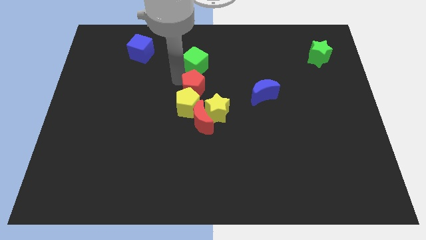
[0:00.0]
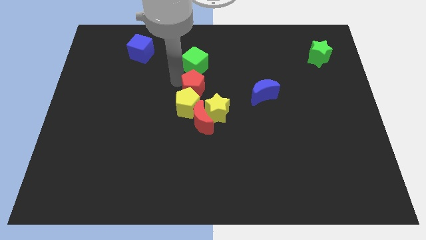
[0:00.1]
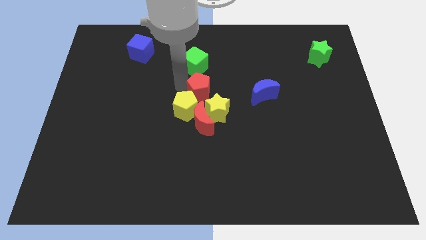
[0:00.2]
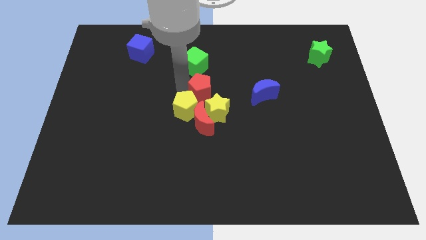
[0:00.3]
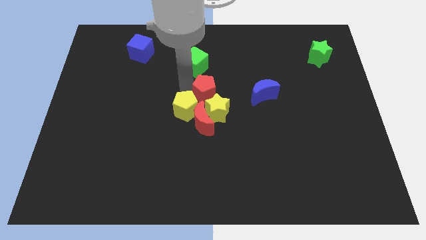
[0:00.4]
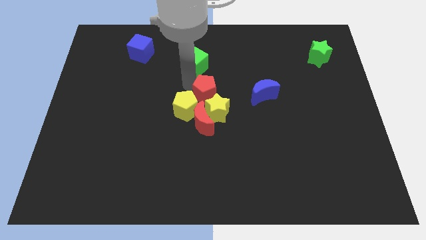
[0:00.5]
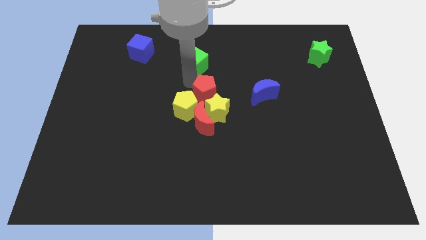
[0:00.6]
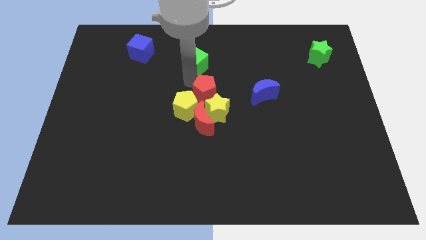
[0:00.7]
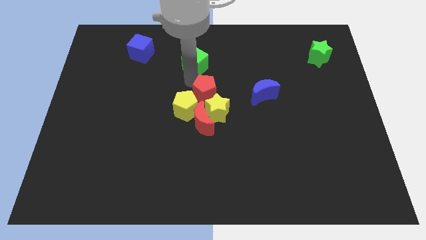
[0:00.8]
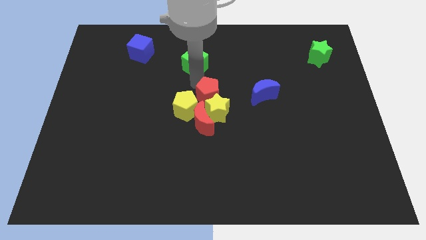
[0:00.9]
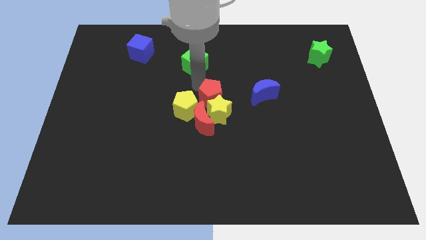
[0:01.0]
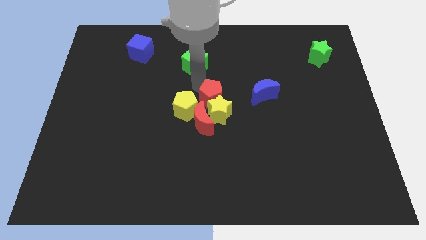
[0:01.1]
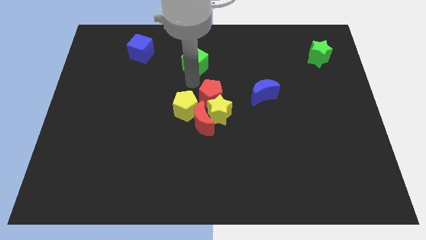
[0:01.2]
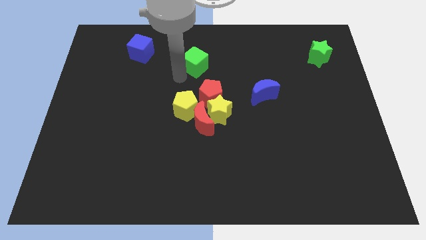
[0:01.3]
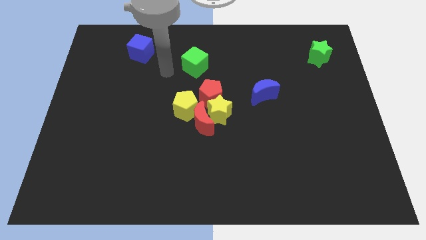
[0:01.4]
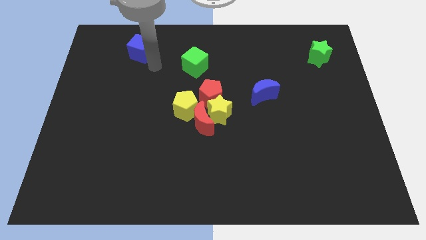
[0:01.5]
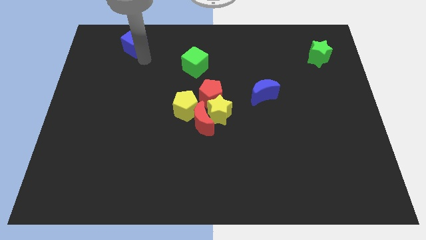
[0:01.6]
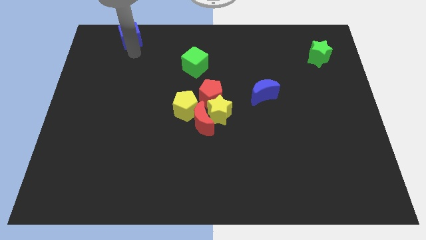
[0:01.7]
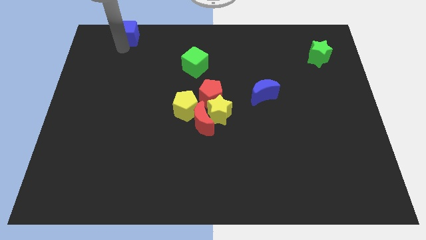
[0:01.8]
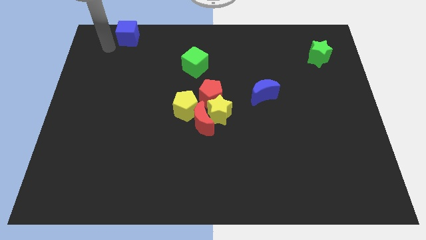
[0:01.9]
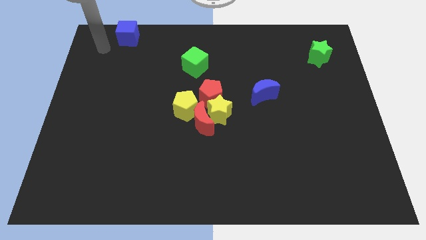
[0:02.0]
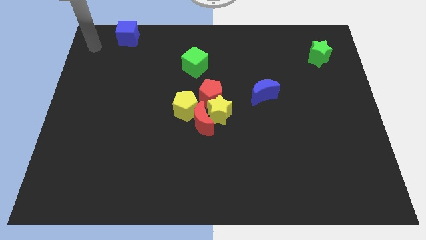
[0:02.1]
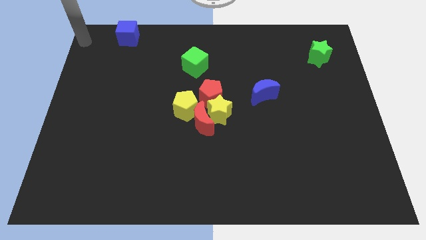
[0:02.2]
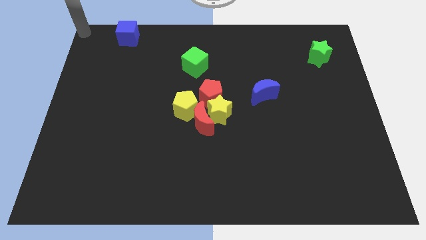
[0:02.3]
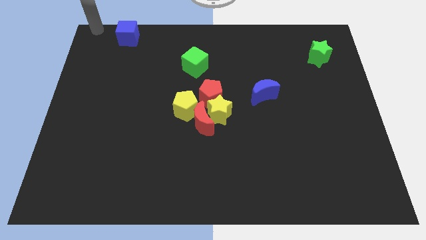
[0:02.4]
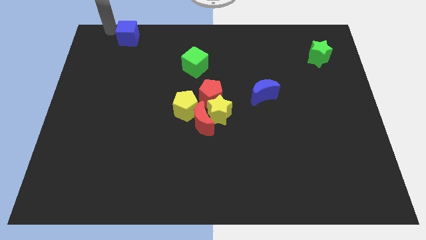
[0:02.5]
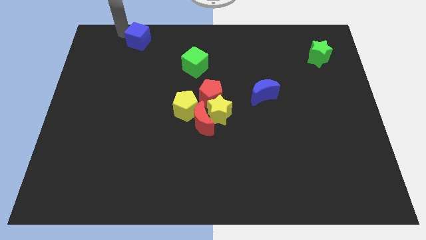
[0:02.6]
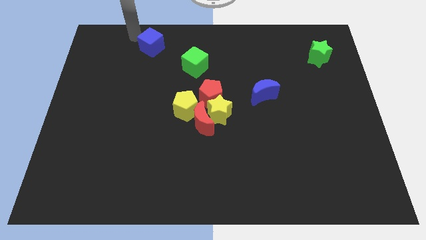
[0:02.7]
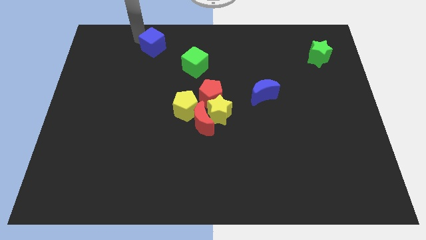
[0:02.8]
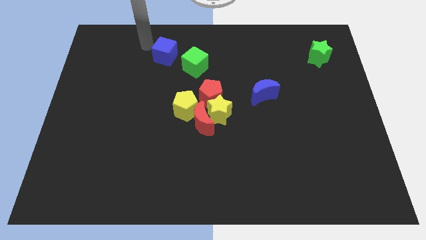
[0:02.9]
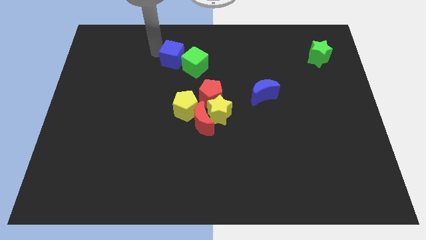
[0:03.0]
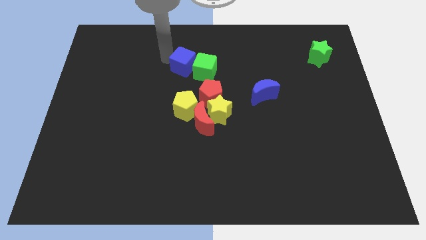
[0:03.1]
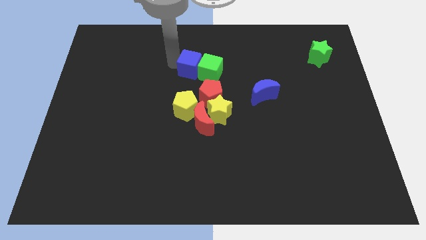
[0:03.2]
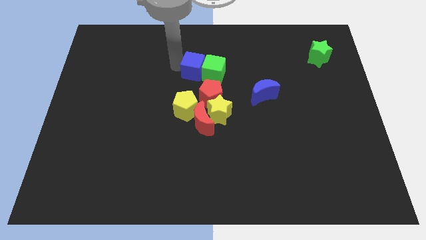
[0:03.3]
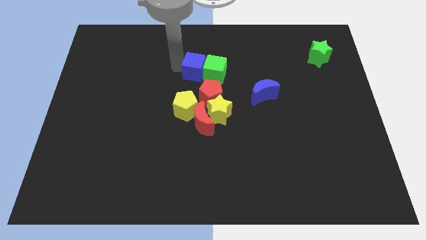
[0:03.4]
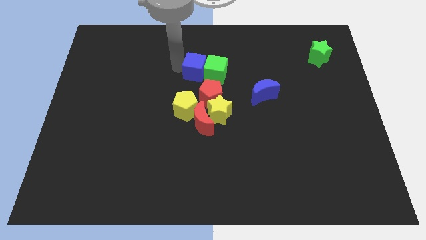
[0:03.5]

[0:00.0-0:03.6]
move the blue cube to the left side of the green cube

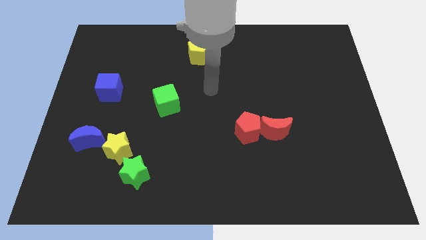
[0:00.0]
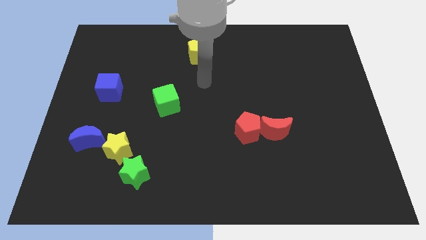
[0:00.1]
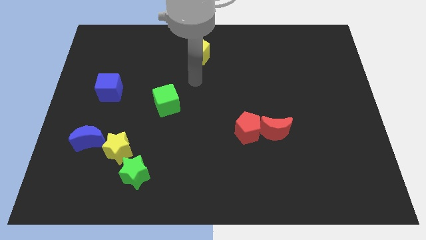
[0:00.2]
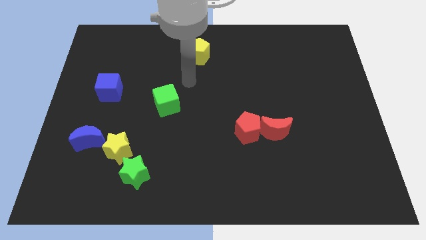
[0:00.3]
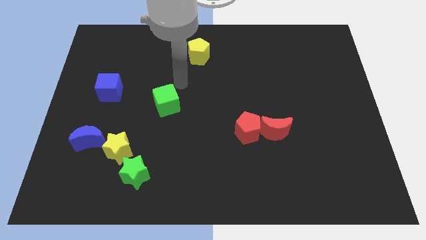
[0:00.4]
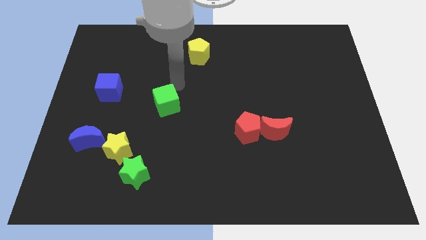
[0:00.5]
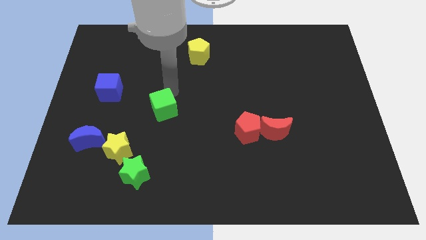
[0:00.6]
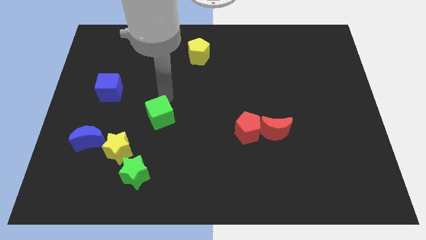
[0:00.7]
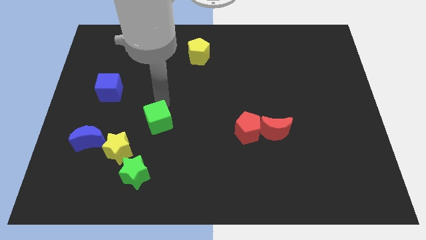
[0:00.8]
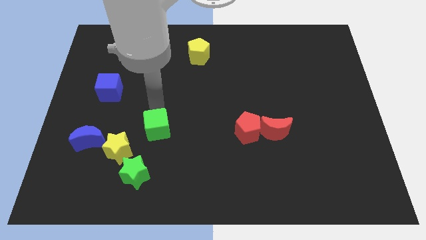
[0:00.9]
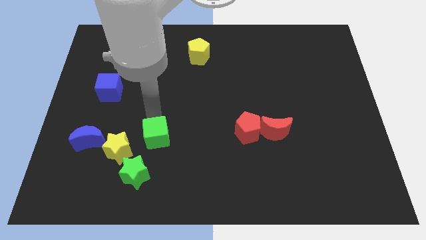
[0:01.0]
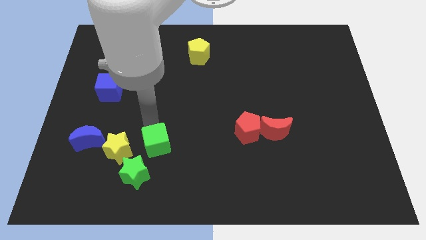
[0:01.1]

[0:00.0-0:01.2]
push the green cube to the top right of the green star

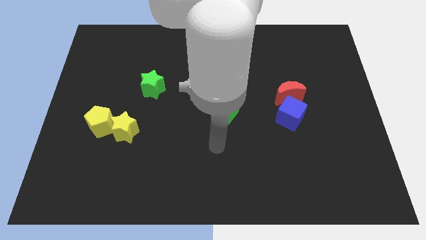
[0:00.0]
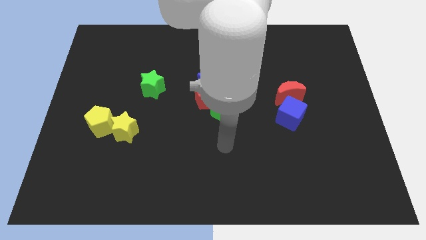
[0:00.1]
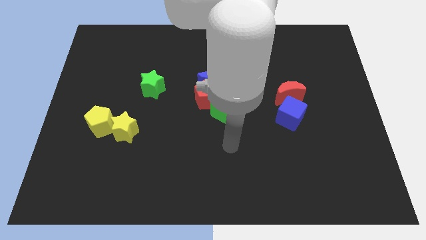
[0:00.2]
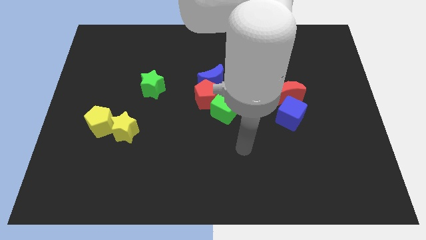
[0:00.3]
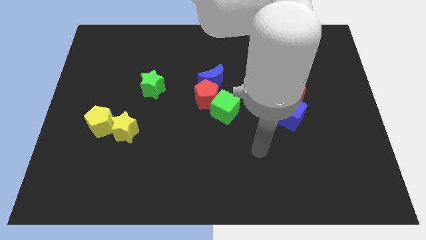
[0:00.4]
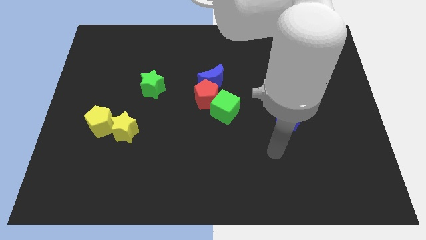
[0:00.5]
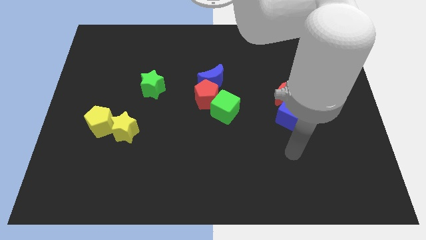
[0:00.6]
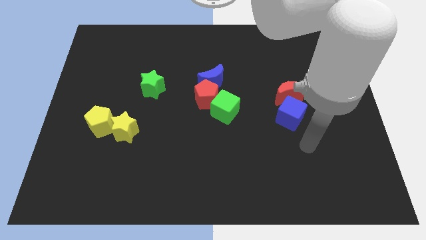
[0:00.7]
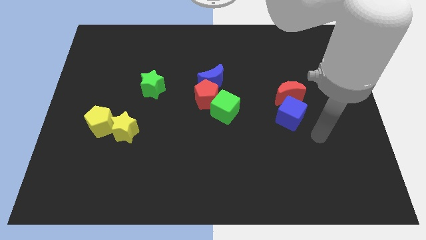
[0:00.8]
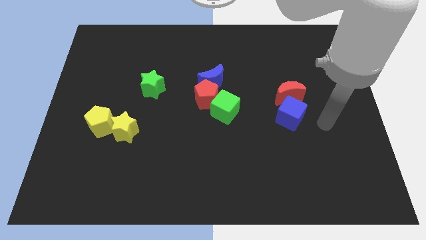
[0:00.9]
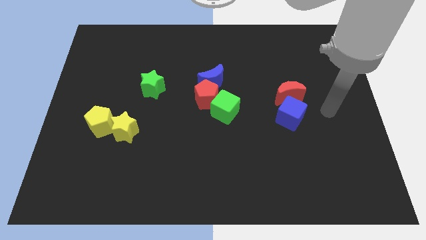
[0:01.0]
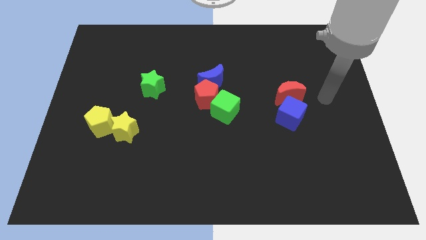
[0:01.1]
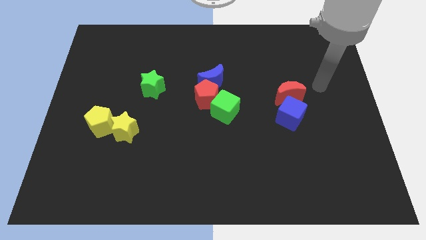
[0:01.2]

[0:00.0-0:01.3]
move the hand at the right side of the red crescent

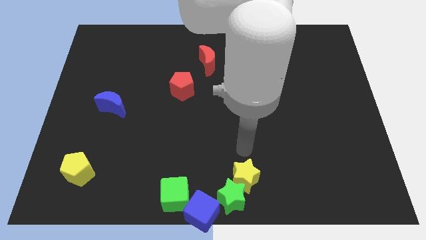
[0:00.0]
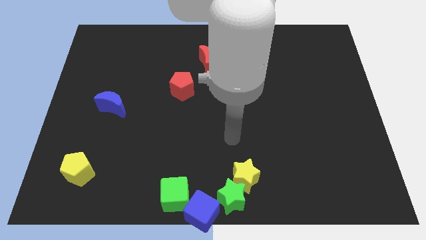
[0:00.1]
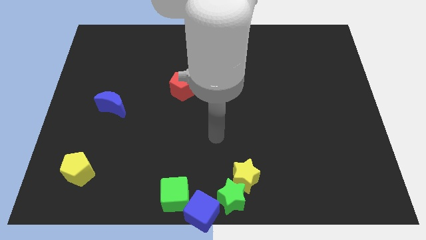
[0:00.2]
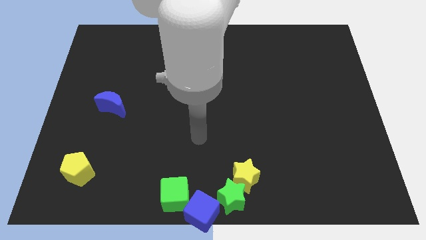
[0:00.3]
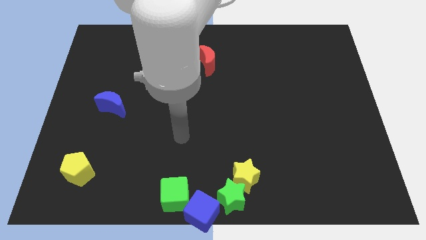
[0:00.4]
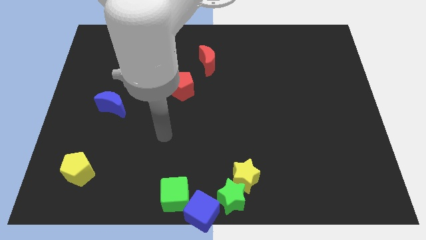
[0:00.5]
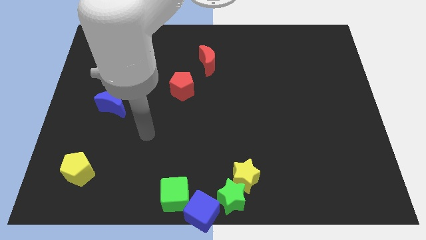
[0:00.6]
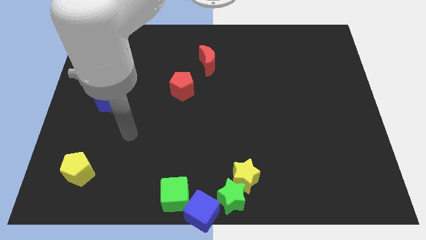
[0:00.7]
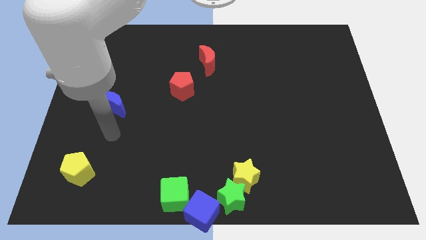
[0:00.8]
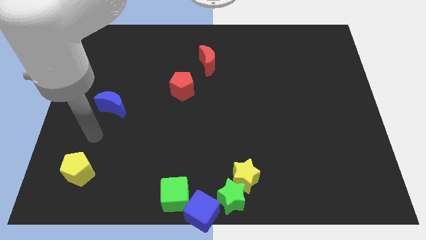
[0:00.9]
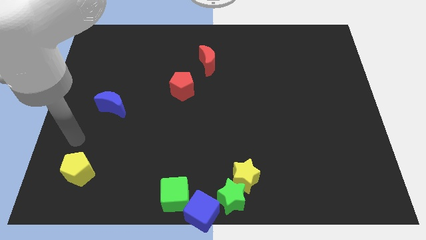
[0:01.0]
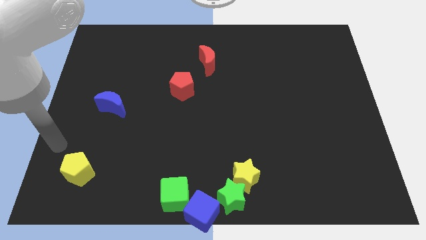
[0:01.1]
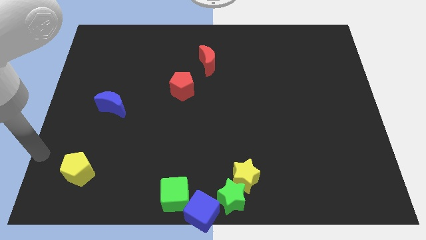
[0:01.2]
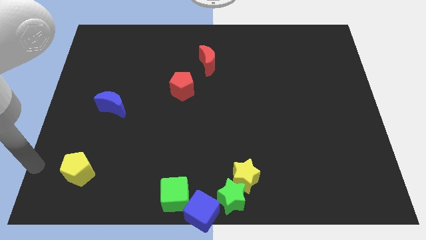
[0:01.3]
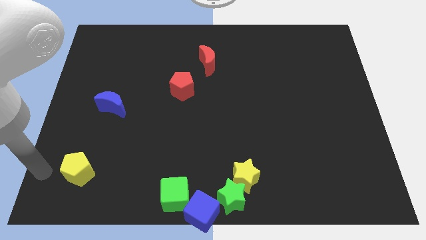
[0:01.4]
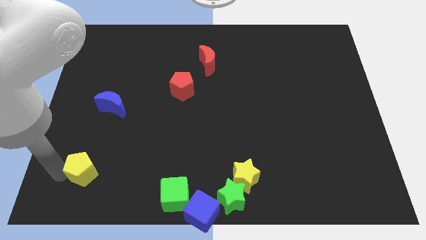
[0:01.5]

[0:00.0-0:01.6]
point your arm towards the left side of the yellow pentagon

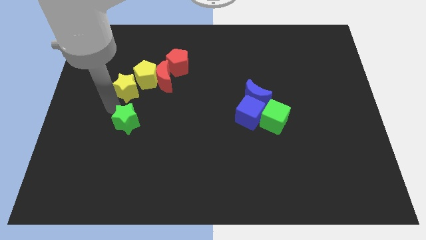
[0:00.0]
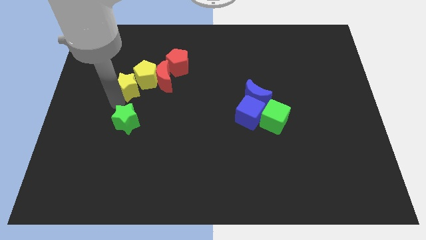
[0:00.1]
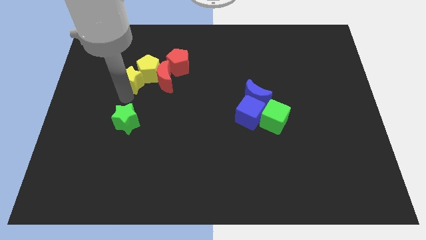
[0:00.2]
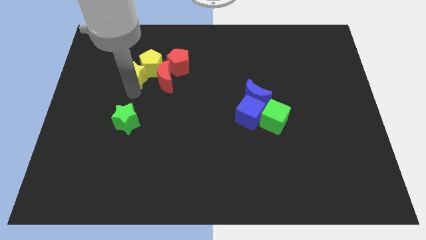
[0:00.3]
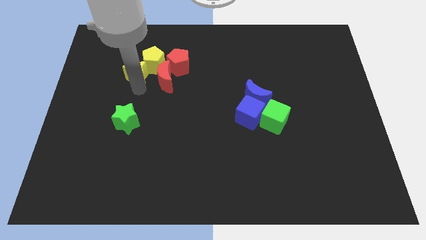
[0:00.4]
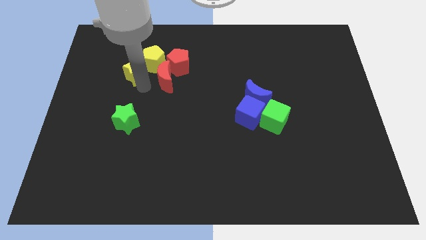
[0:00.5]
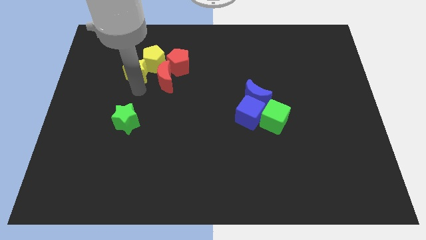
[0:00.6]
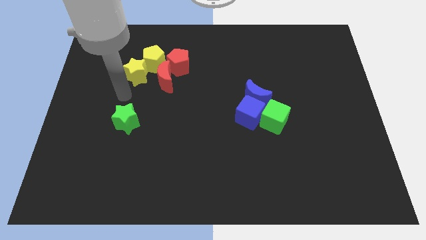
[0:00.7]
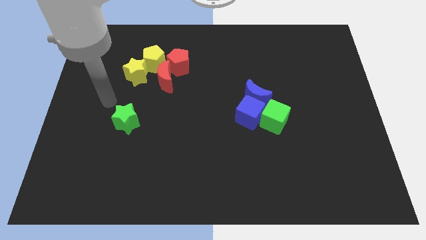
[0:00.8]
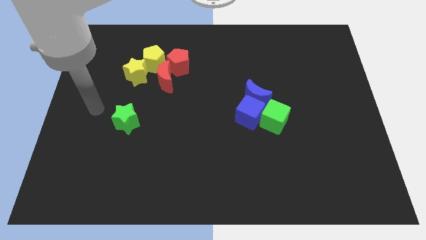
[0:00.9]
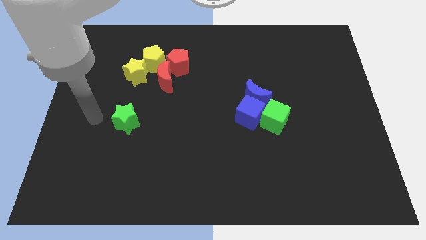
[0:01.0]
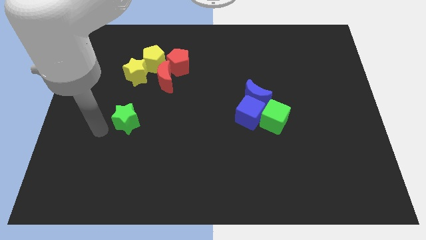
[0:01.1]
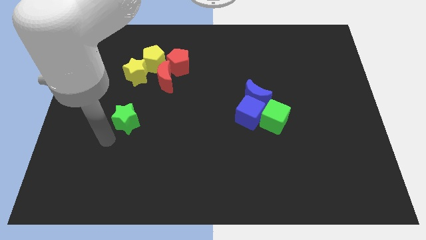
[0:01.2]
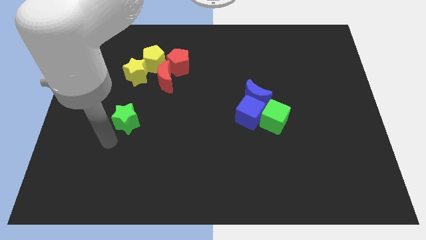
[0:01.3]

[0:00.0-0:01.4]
move the yellow blocks slightly up
